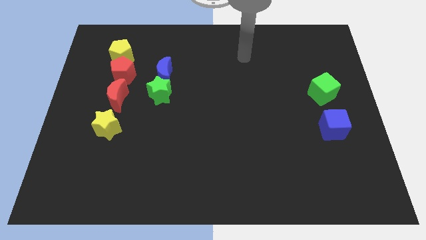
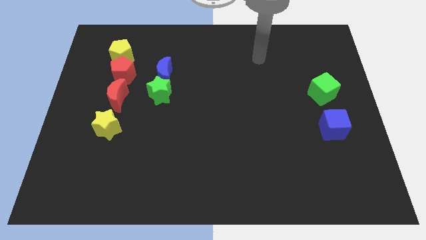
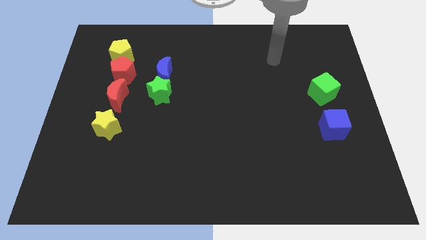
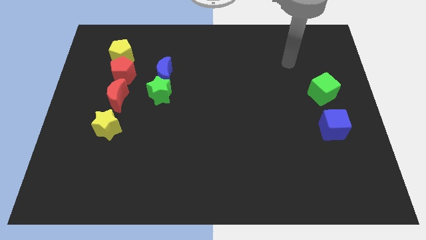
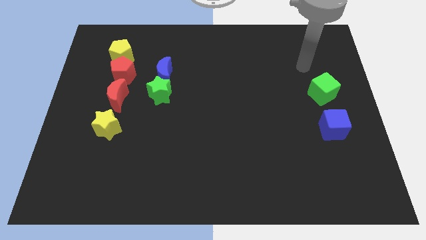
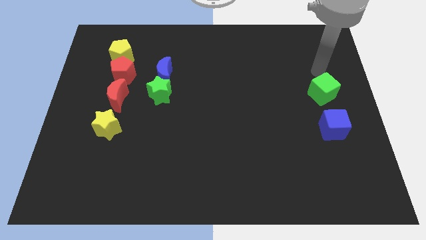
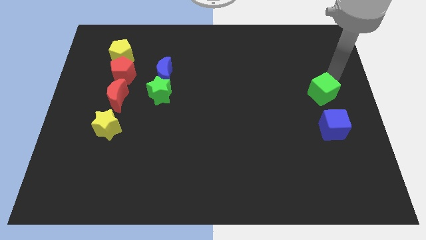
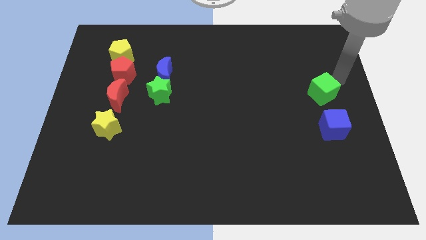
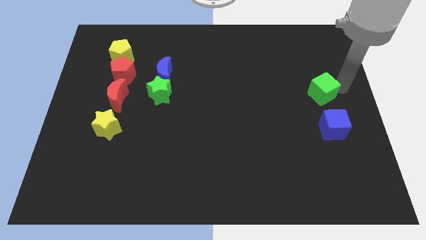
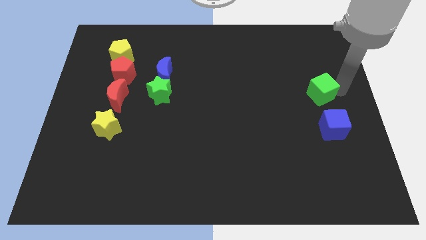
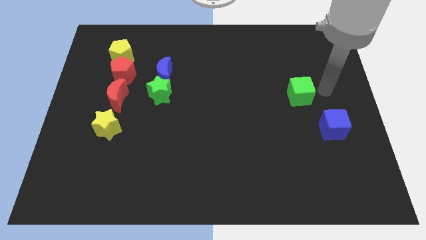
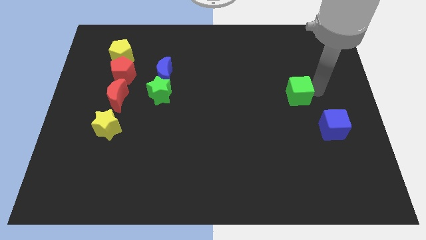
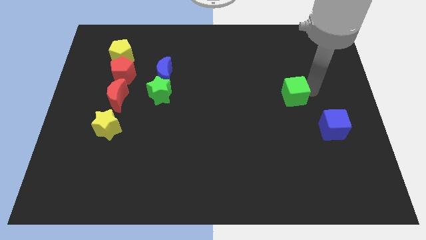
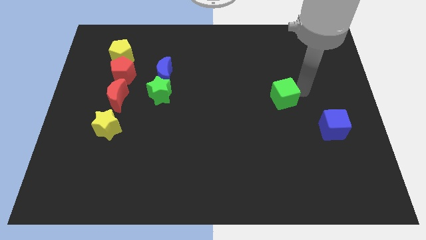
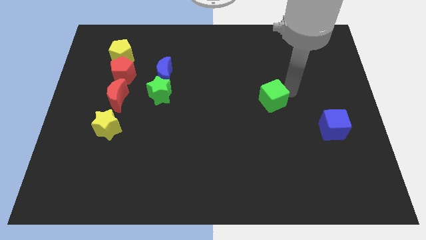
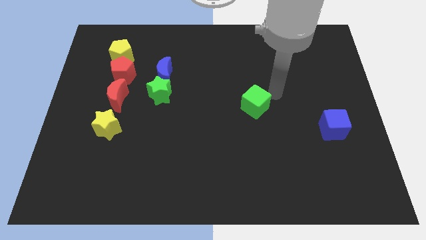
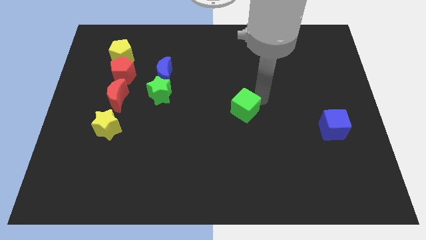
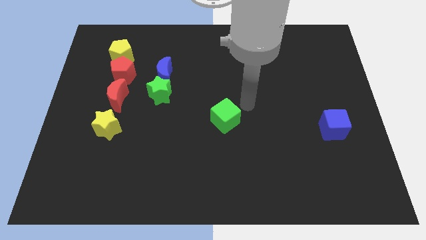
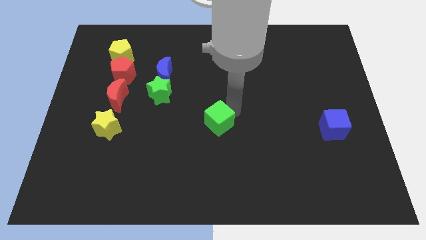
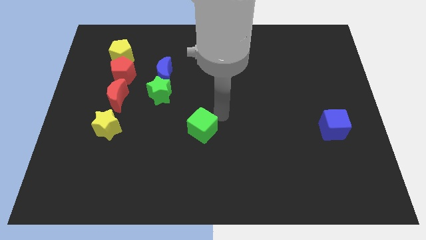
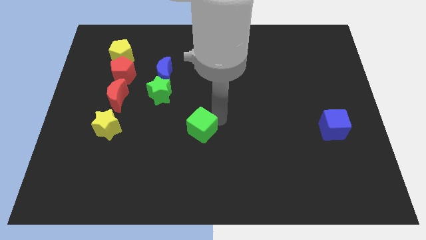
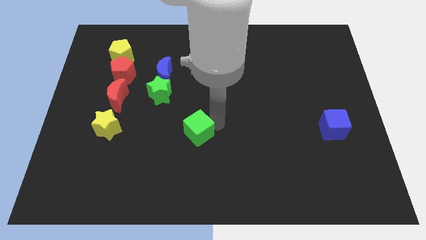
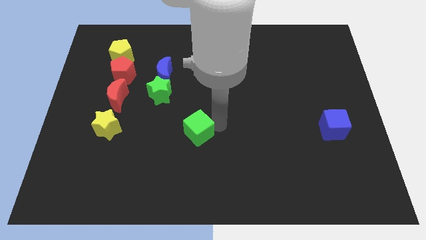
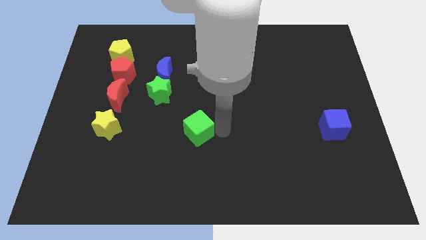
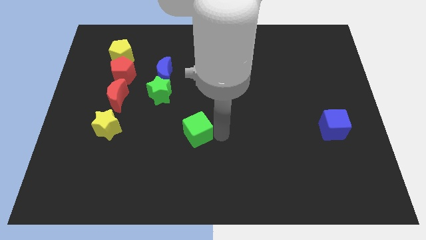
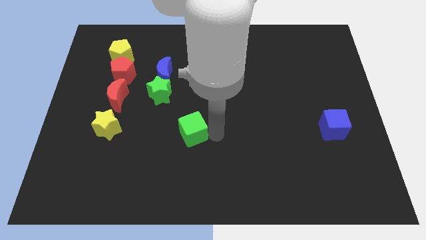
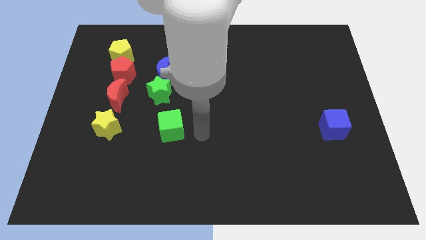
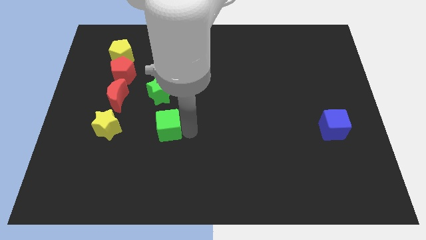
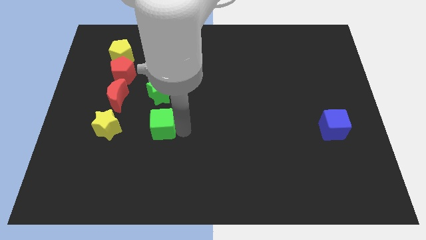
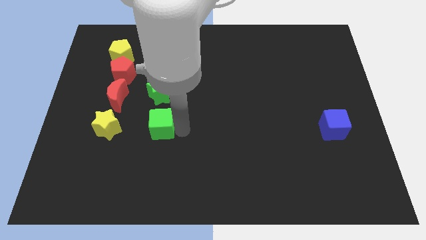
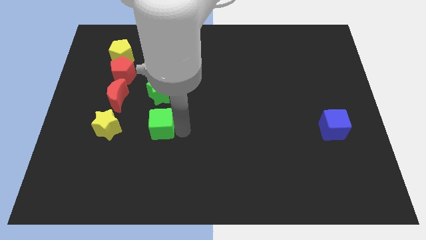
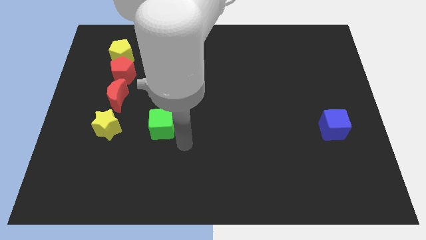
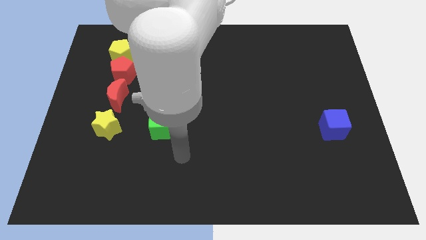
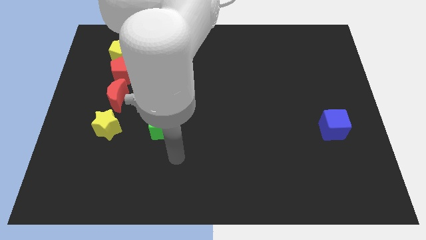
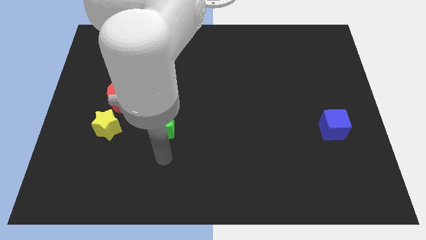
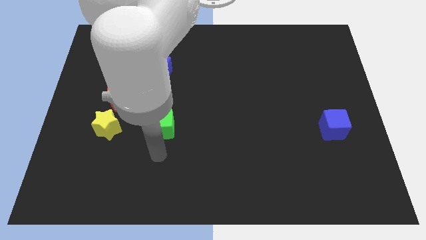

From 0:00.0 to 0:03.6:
push green cube below green star

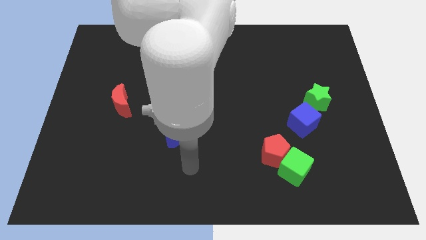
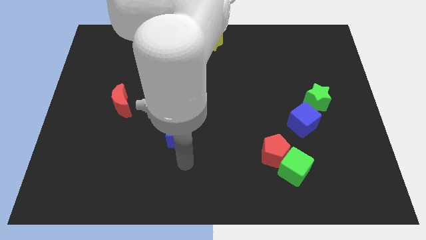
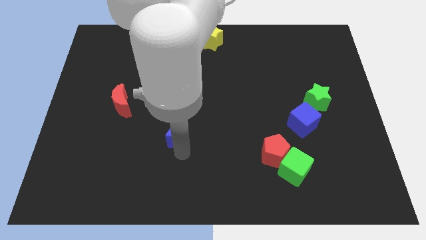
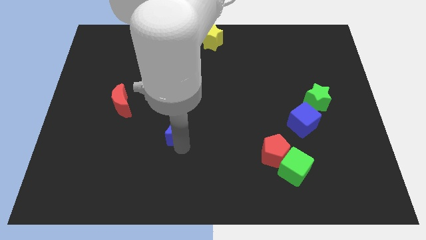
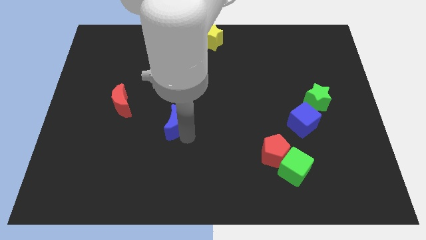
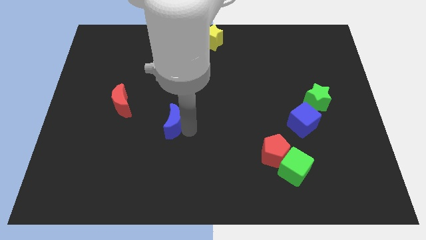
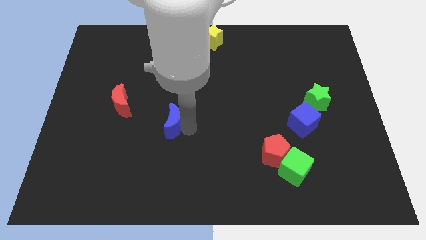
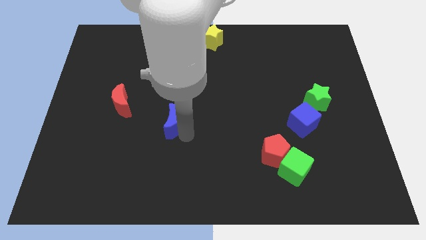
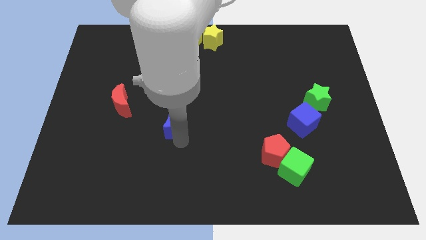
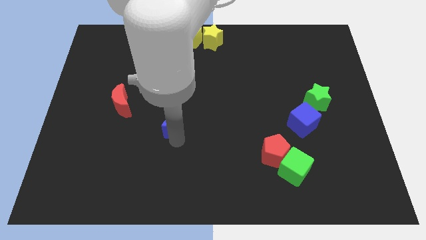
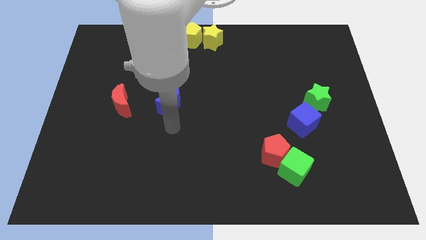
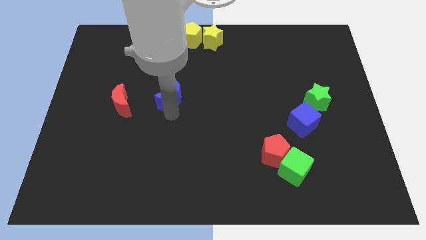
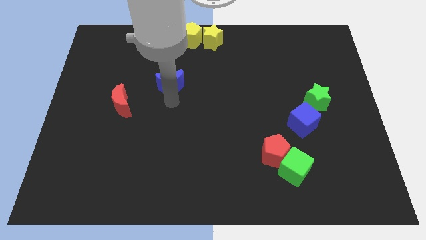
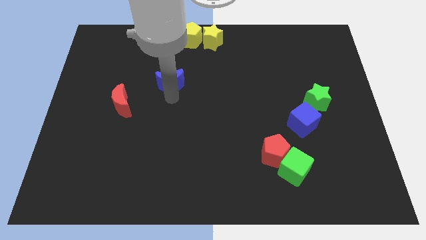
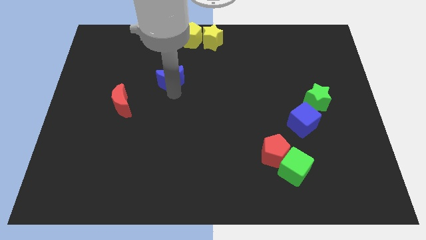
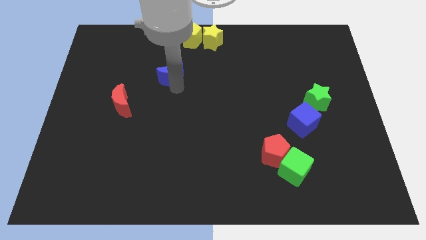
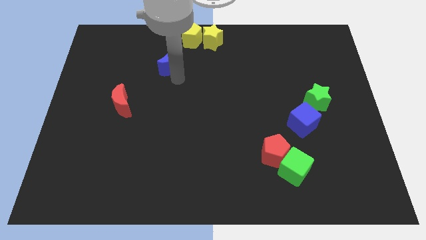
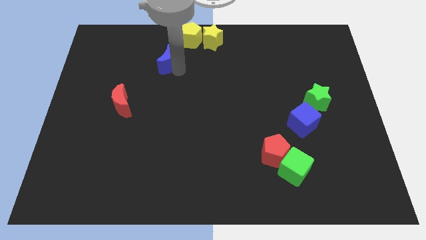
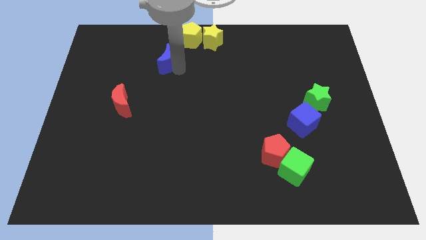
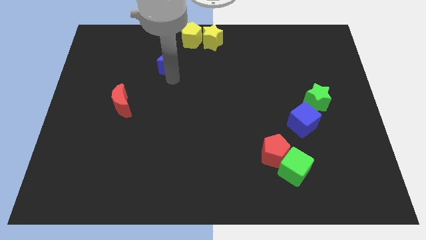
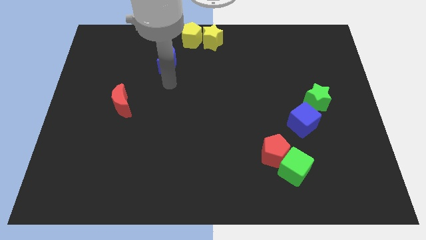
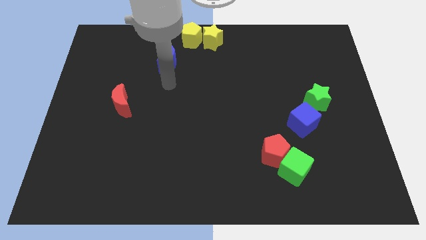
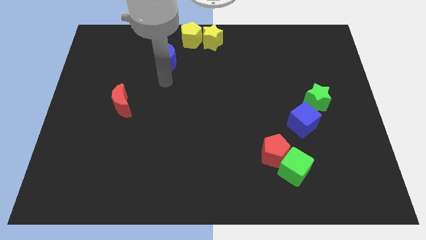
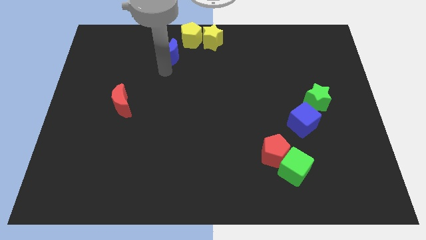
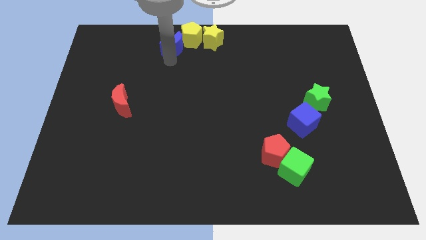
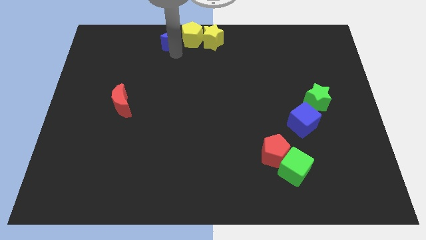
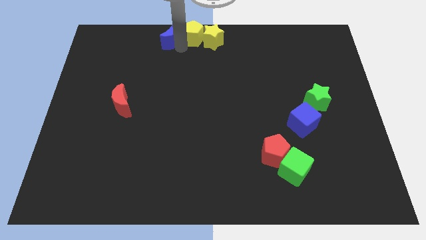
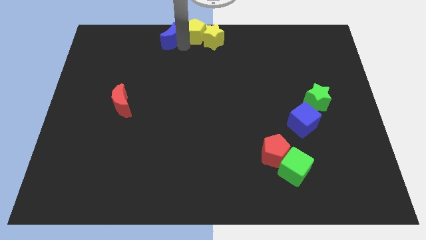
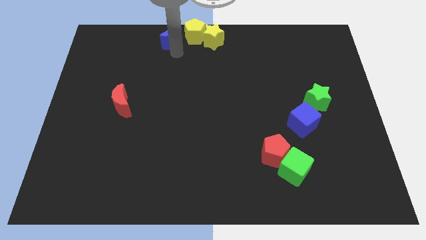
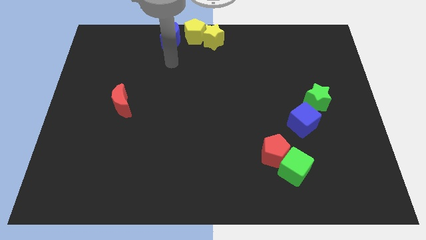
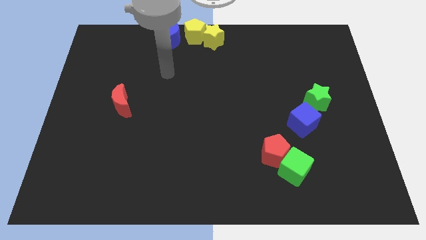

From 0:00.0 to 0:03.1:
push blue moon to the left of yellow pentagon

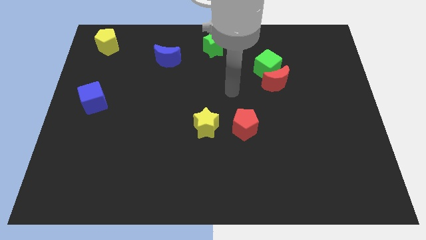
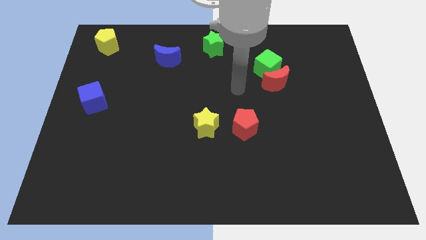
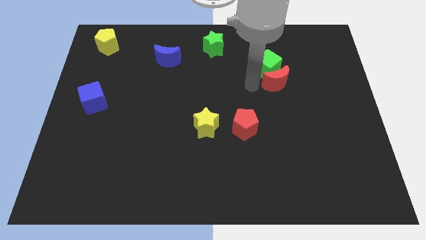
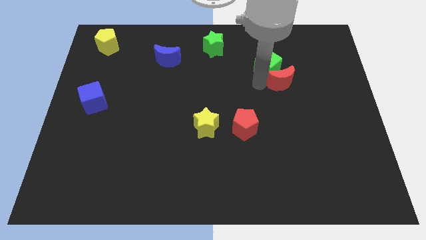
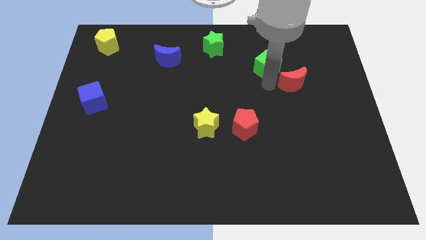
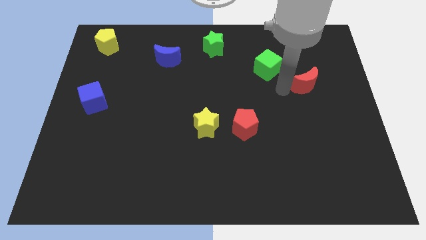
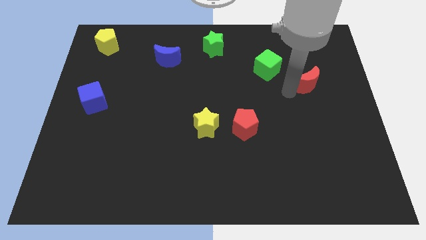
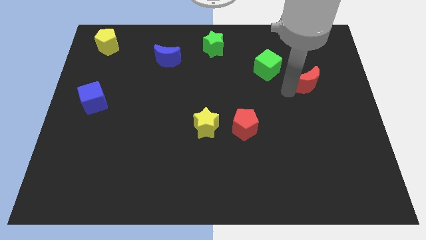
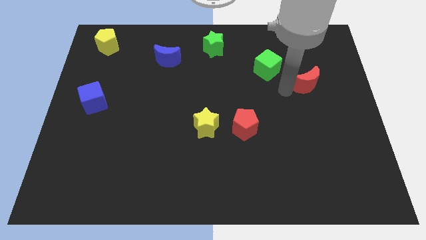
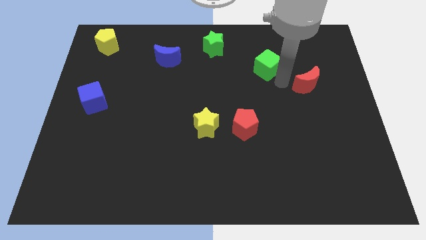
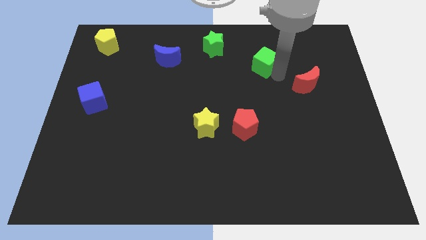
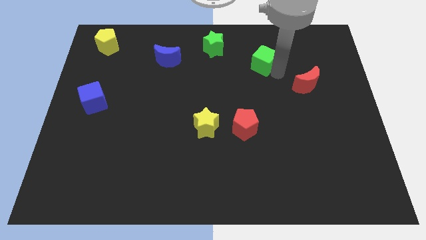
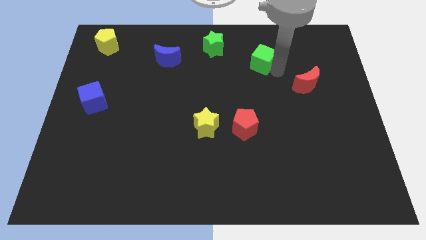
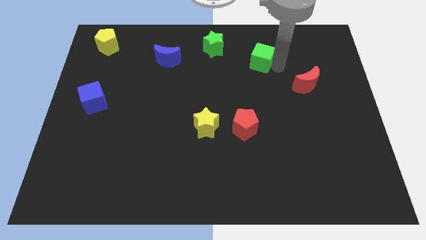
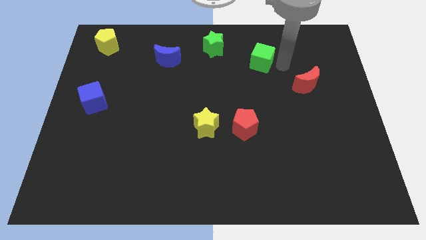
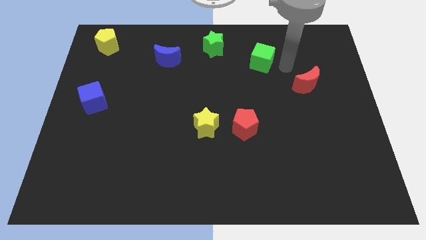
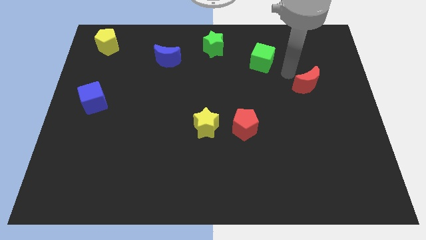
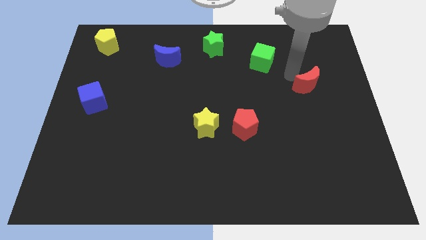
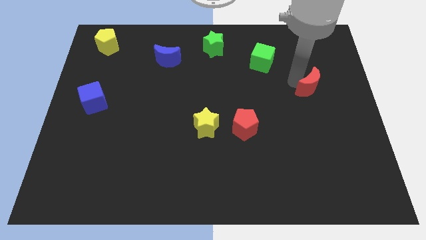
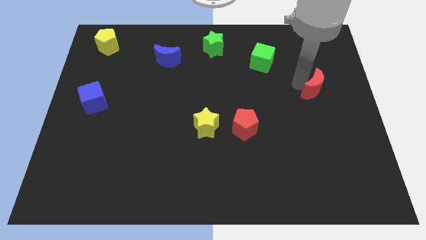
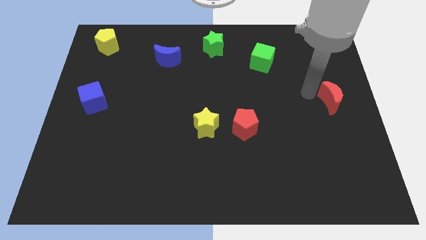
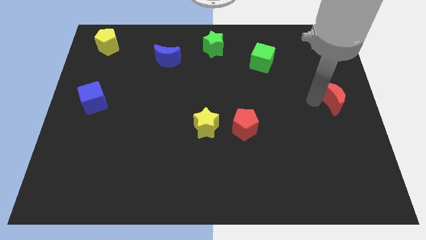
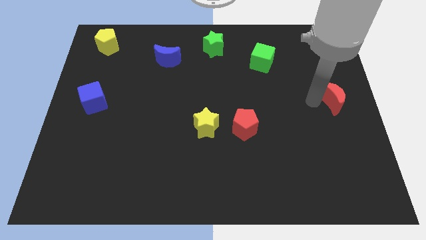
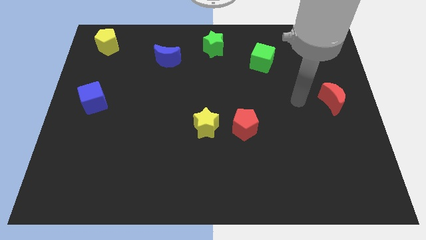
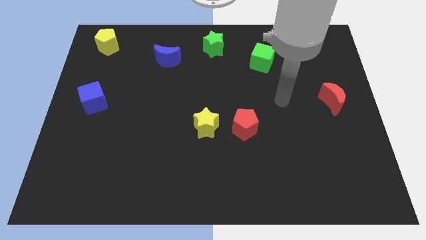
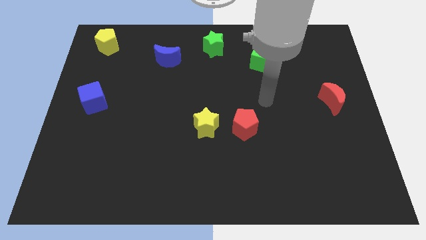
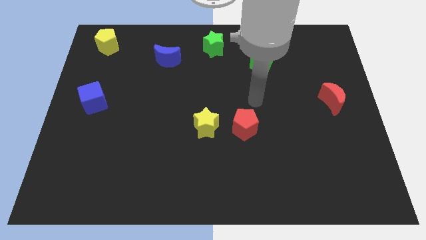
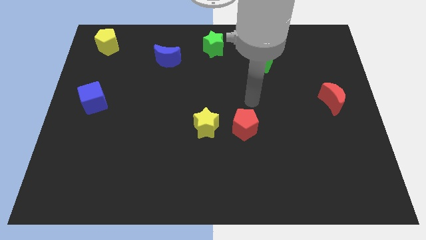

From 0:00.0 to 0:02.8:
place the red crescent at the right center
